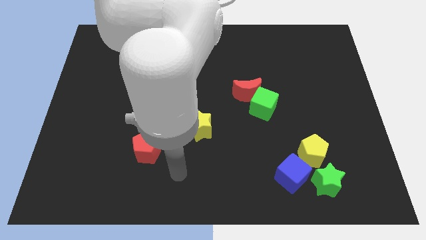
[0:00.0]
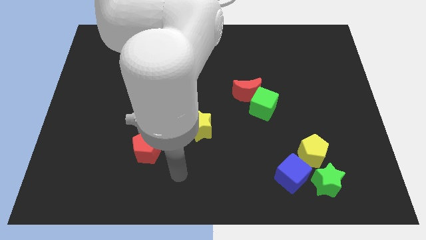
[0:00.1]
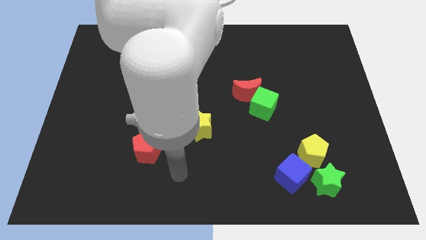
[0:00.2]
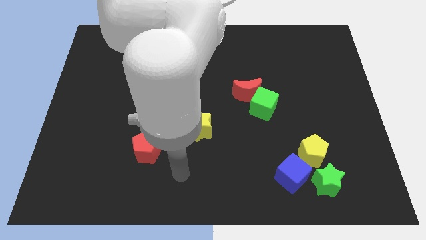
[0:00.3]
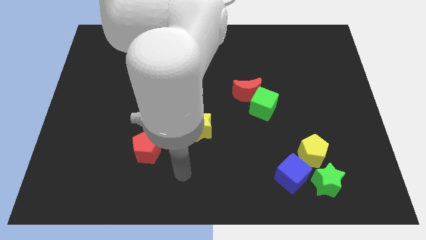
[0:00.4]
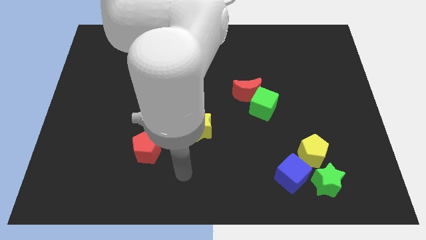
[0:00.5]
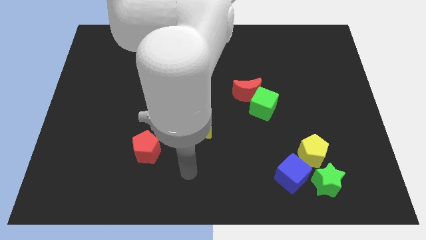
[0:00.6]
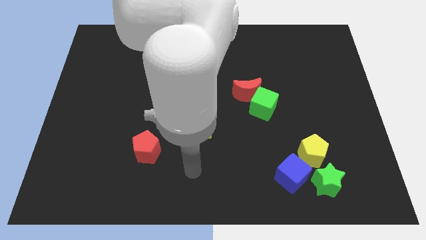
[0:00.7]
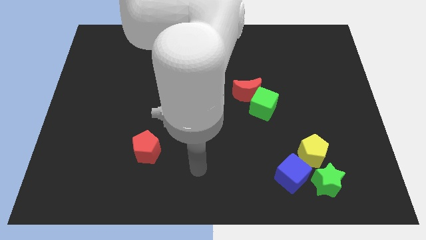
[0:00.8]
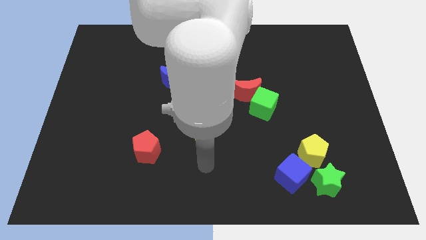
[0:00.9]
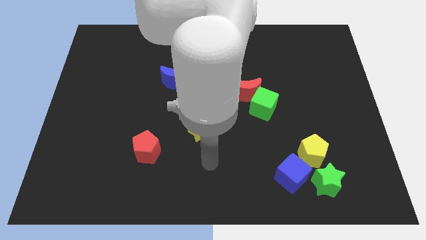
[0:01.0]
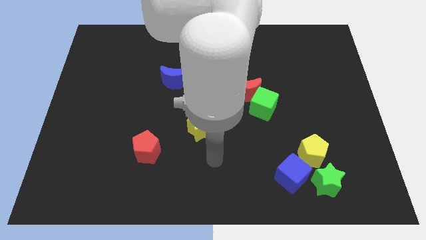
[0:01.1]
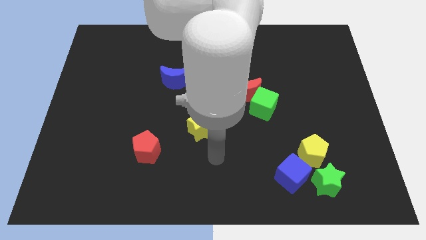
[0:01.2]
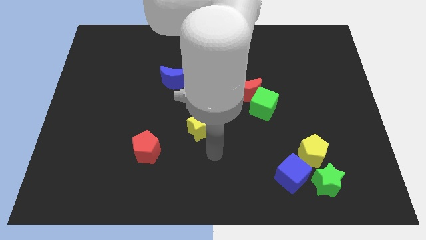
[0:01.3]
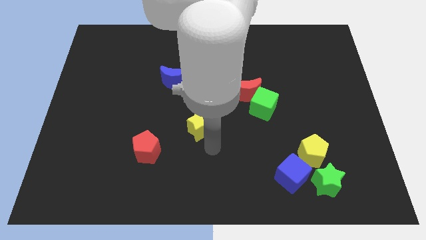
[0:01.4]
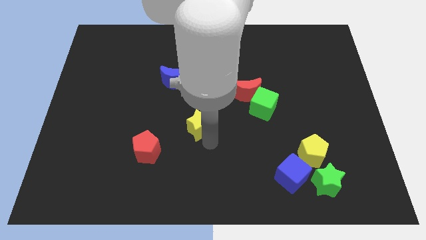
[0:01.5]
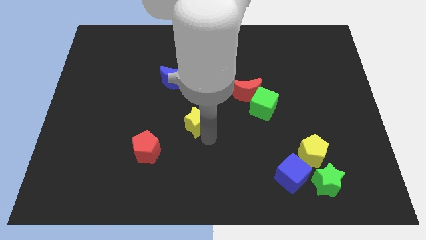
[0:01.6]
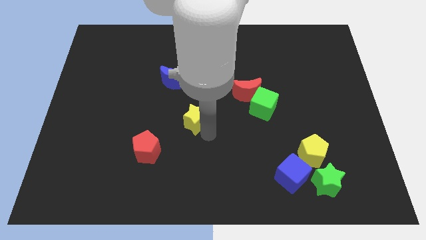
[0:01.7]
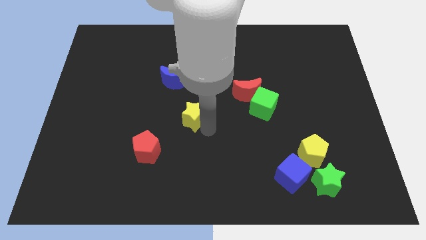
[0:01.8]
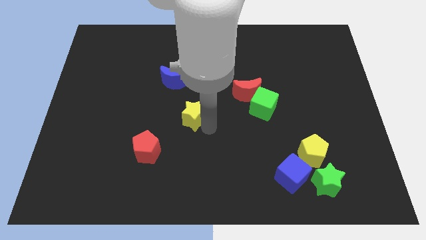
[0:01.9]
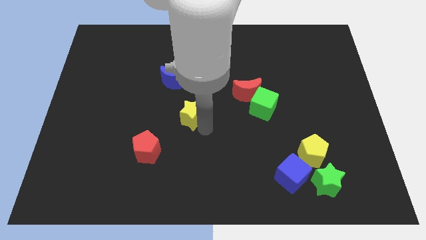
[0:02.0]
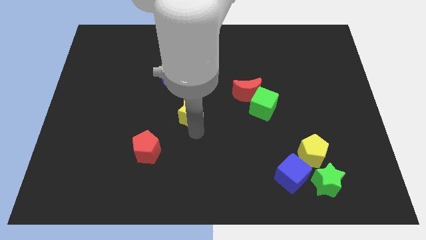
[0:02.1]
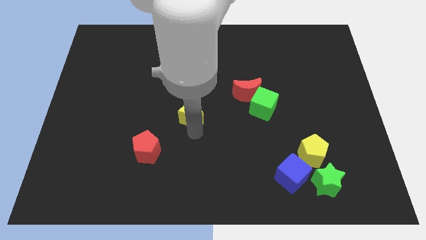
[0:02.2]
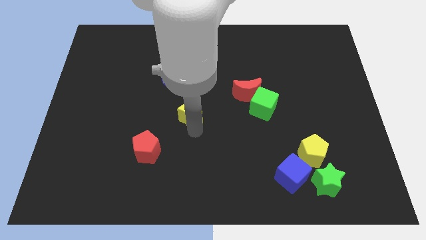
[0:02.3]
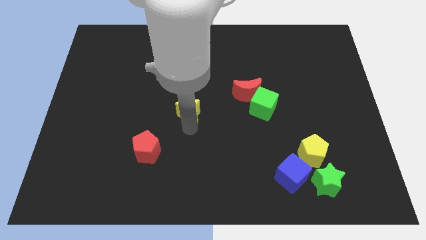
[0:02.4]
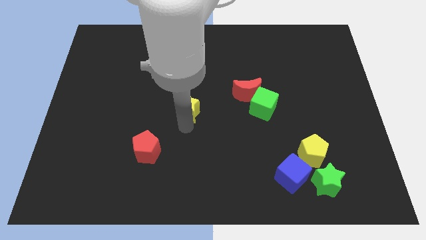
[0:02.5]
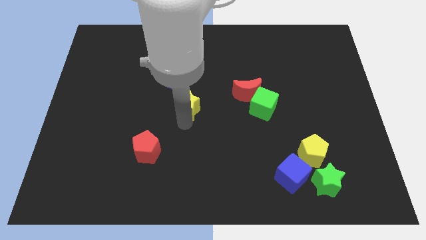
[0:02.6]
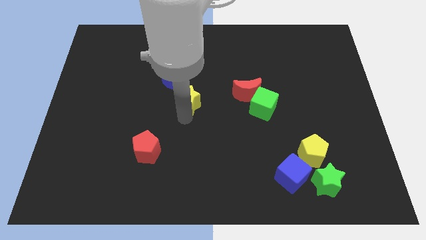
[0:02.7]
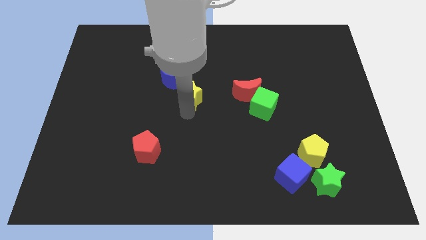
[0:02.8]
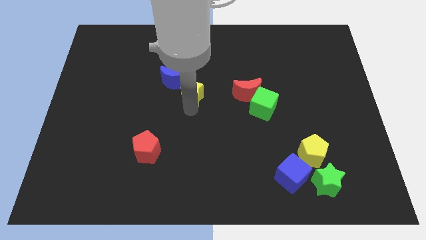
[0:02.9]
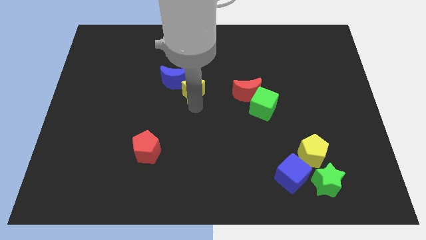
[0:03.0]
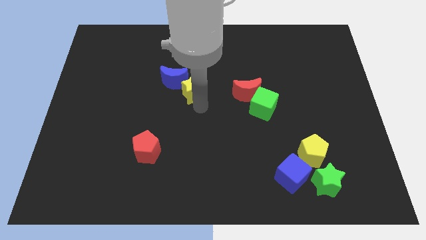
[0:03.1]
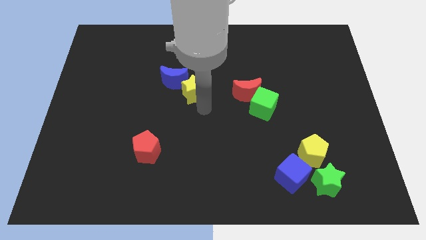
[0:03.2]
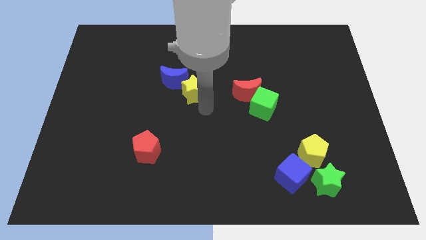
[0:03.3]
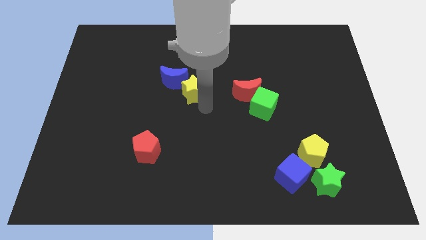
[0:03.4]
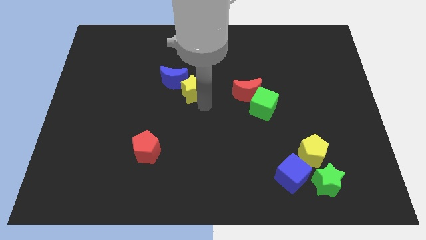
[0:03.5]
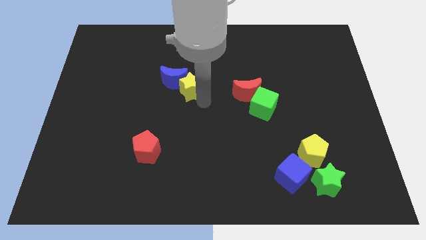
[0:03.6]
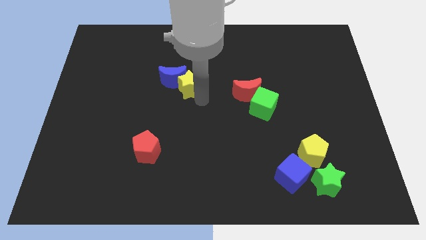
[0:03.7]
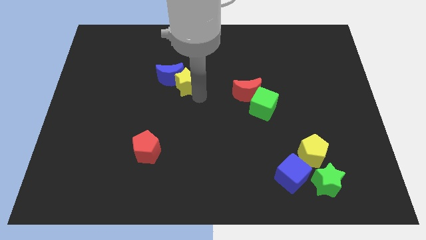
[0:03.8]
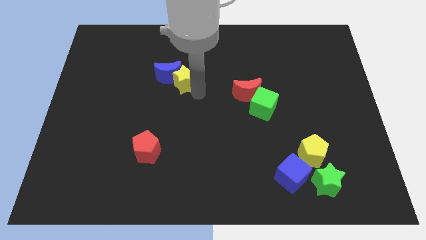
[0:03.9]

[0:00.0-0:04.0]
move the yellow star into the blue crescent

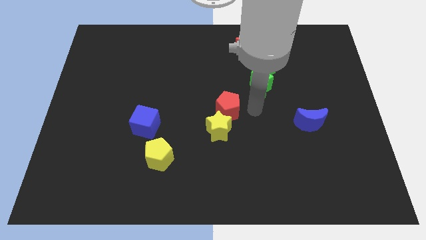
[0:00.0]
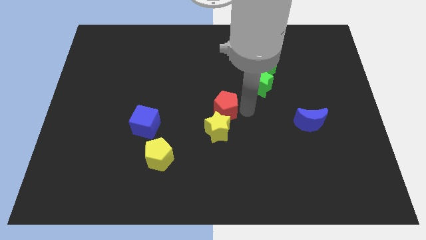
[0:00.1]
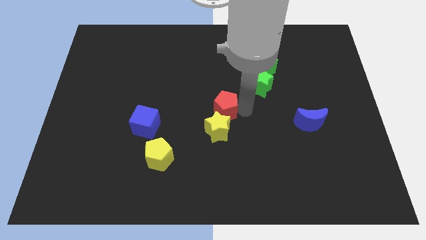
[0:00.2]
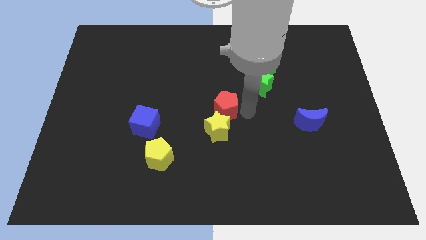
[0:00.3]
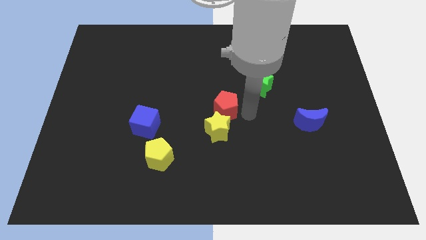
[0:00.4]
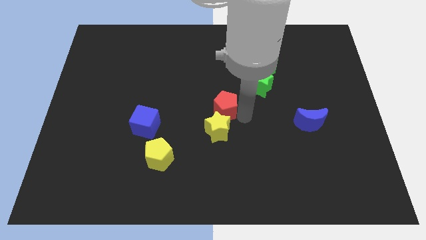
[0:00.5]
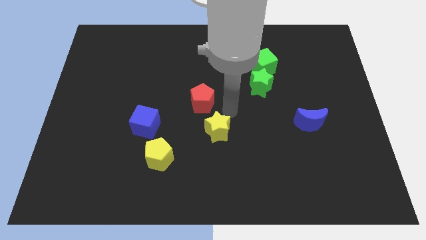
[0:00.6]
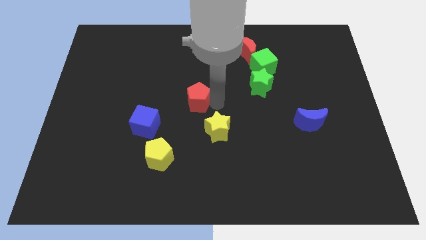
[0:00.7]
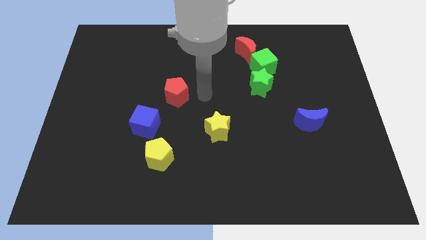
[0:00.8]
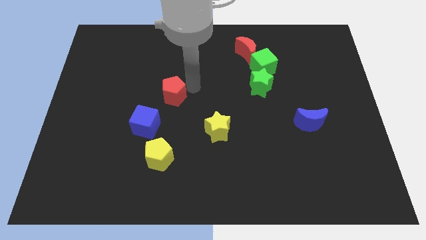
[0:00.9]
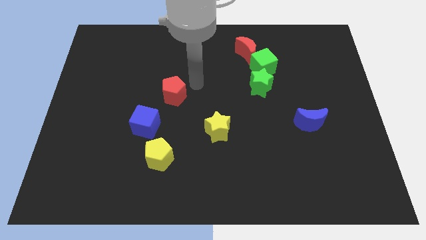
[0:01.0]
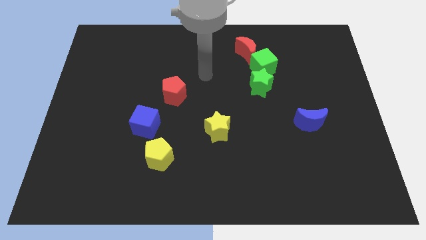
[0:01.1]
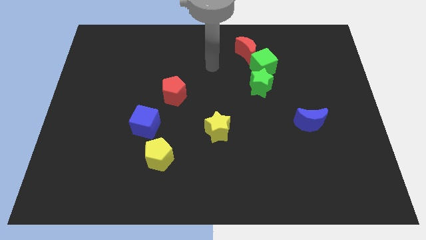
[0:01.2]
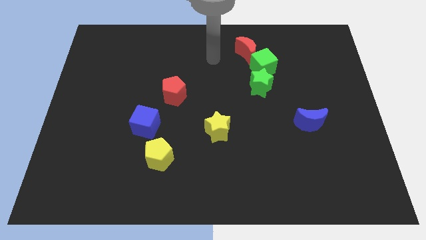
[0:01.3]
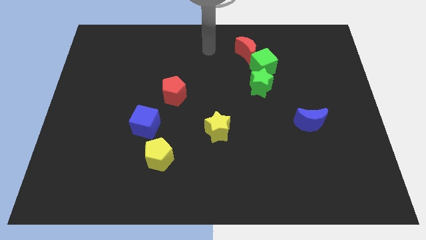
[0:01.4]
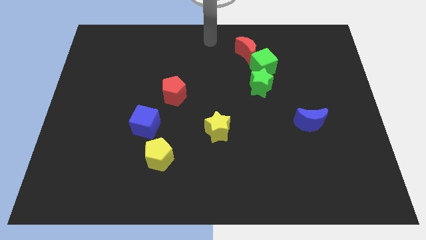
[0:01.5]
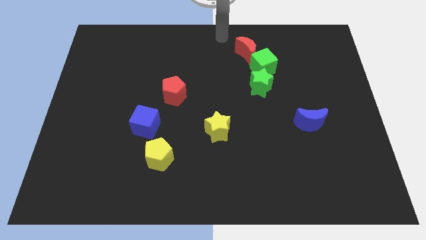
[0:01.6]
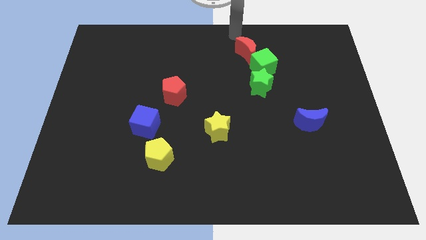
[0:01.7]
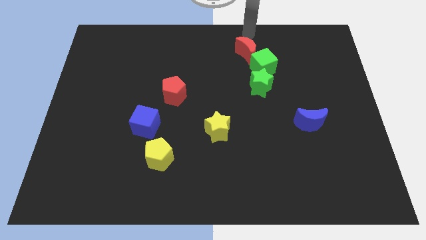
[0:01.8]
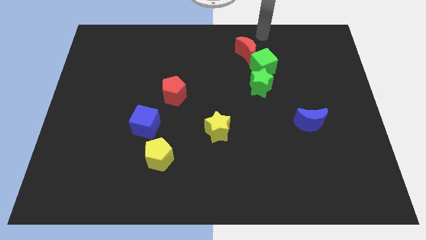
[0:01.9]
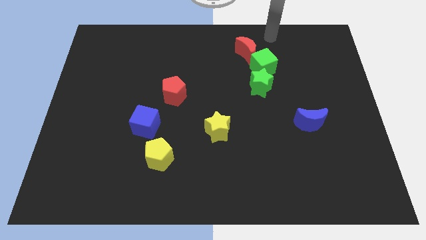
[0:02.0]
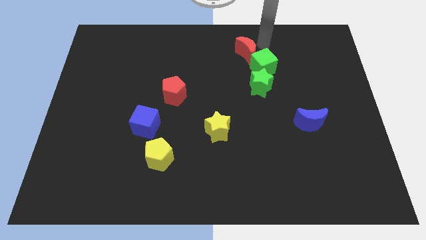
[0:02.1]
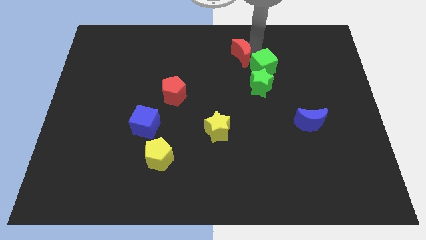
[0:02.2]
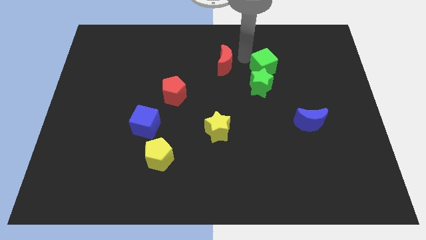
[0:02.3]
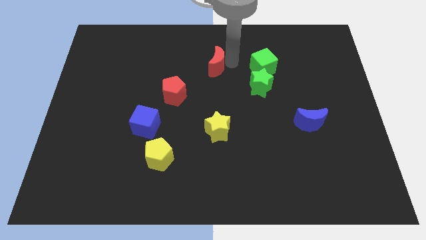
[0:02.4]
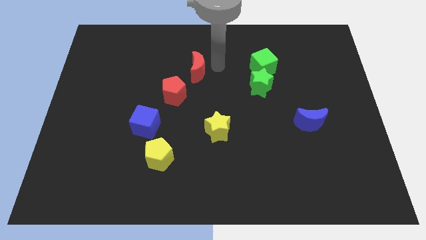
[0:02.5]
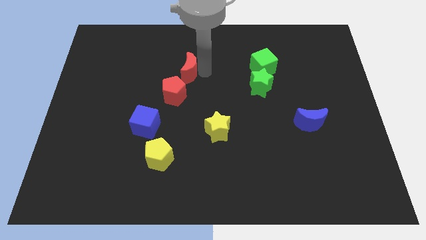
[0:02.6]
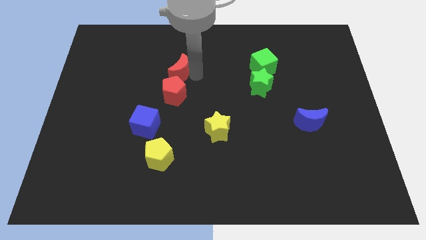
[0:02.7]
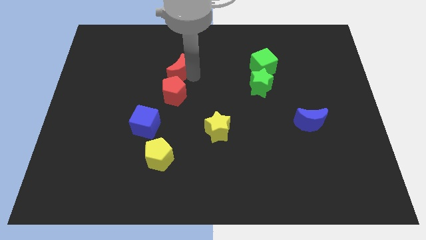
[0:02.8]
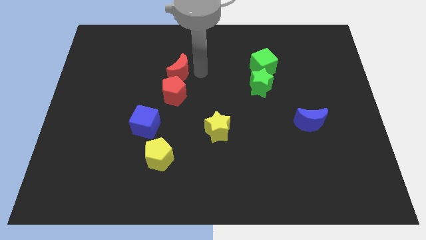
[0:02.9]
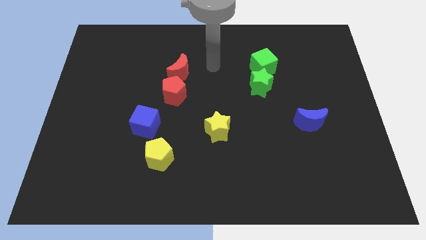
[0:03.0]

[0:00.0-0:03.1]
place the red moon to the top of the red pentagon

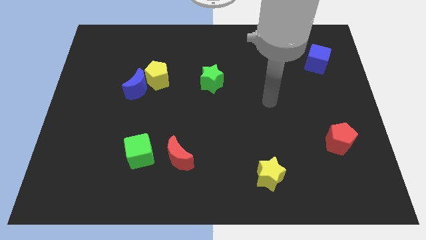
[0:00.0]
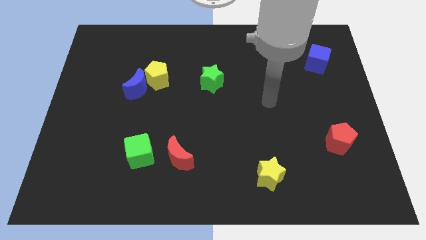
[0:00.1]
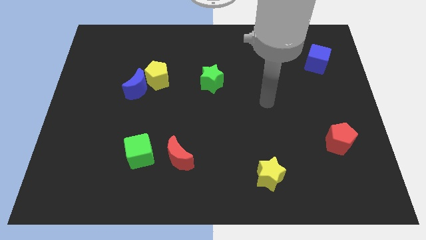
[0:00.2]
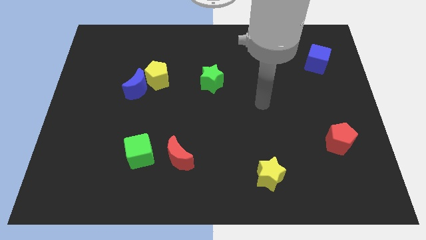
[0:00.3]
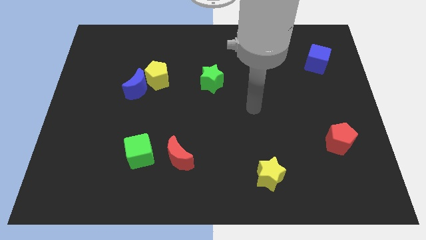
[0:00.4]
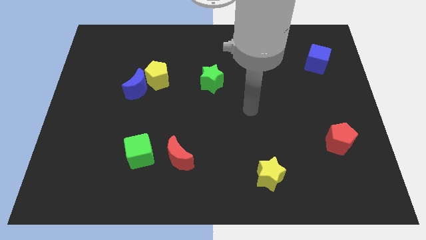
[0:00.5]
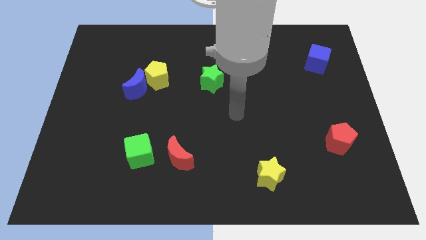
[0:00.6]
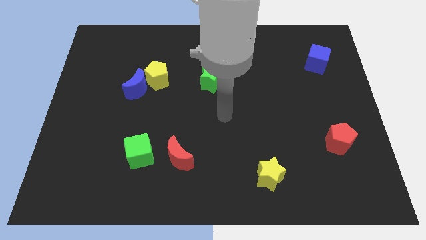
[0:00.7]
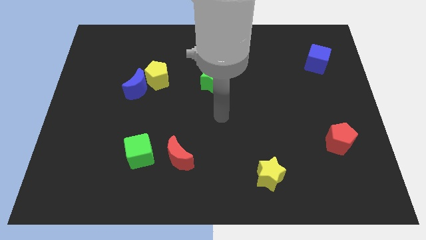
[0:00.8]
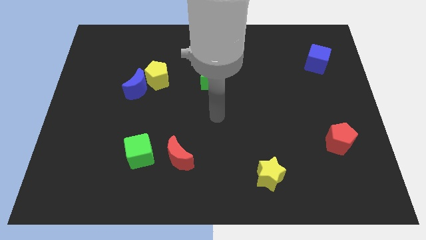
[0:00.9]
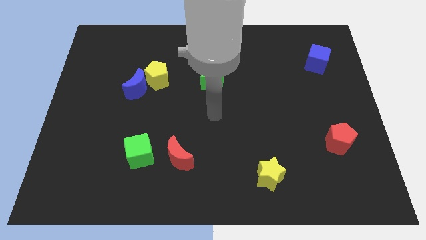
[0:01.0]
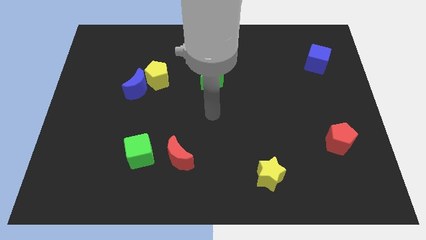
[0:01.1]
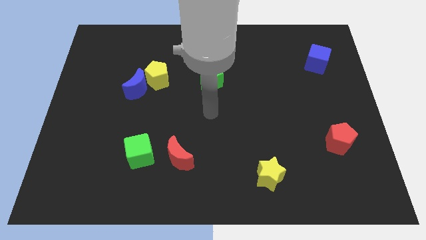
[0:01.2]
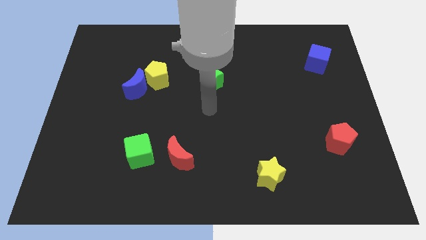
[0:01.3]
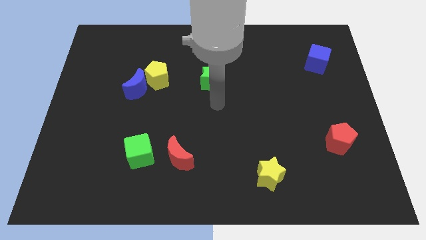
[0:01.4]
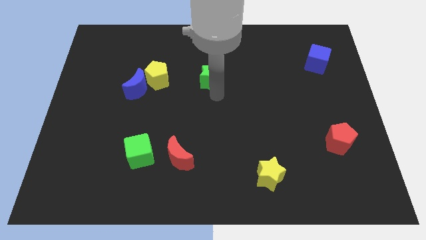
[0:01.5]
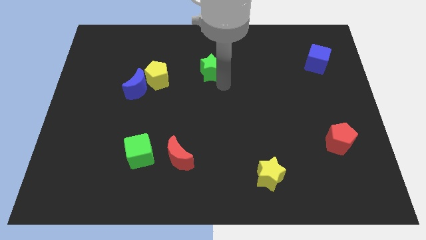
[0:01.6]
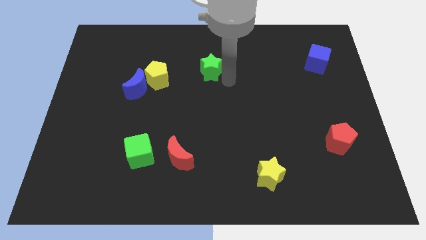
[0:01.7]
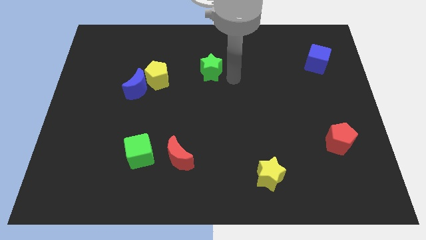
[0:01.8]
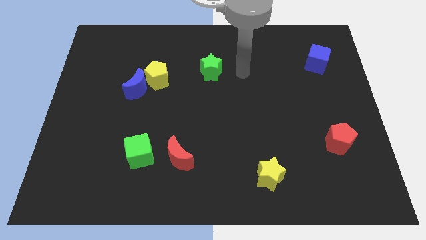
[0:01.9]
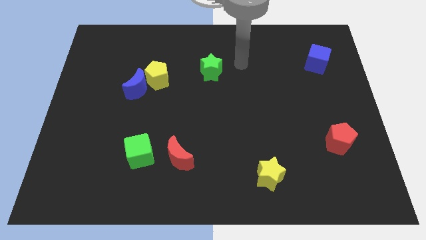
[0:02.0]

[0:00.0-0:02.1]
moved the star slightly upward
